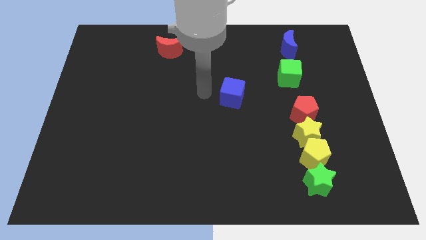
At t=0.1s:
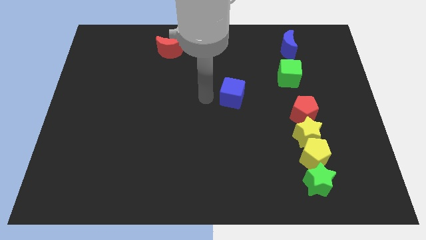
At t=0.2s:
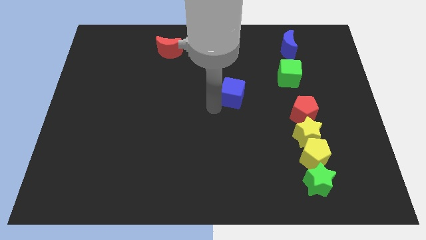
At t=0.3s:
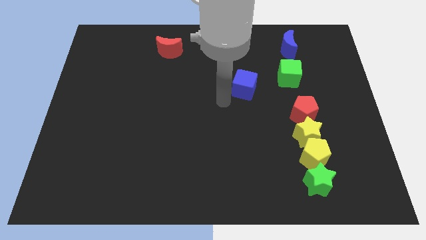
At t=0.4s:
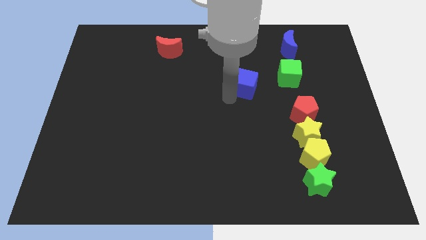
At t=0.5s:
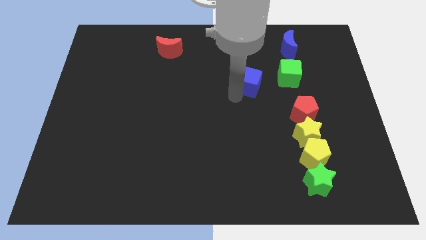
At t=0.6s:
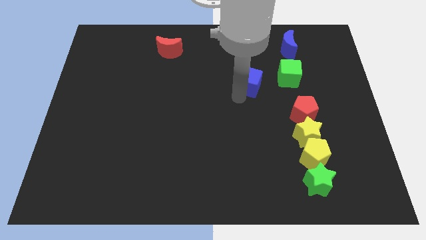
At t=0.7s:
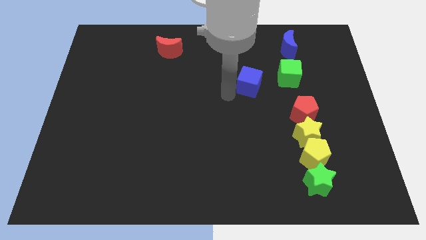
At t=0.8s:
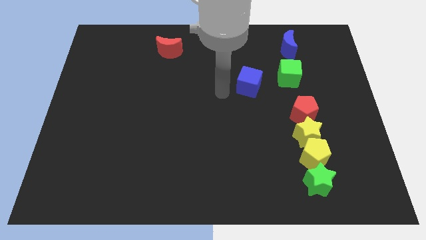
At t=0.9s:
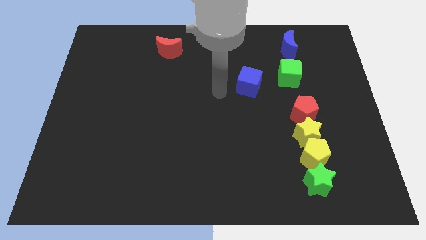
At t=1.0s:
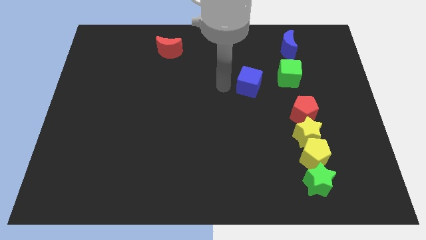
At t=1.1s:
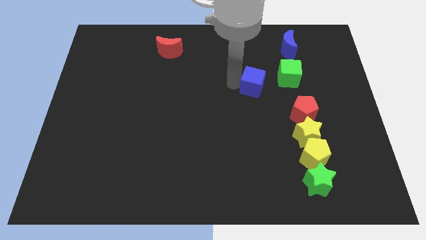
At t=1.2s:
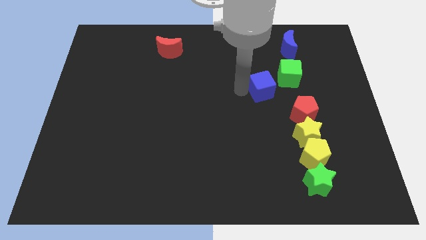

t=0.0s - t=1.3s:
push the blue cube towards the green cube

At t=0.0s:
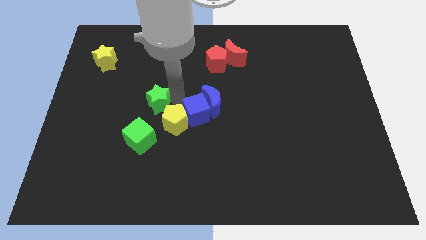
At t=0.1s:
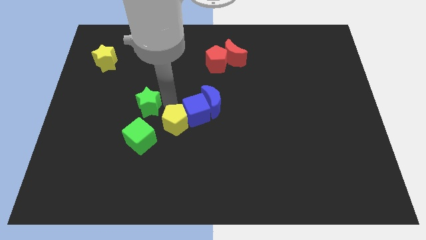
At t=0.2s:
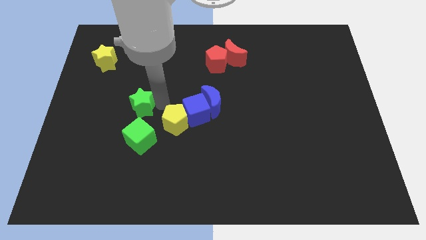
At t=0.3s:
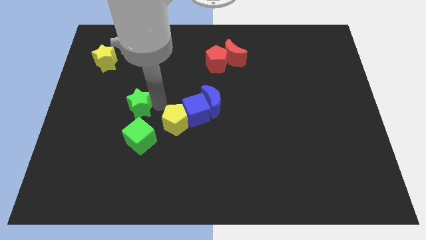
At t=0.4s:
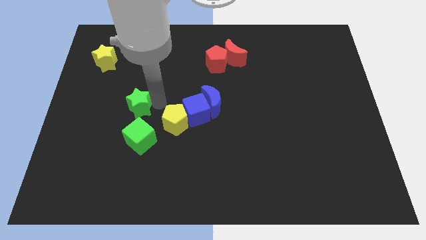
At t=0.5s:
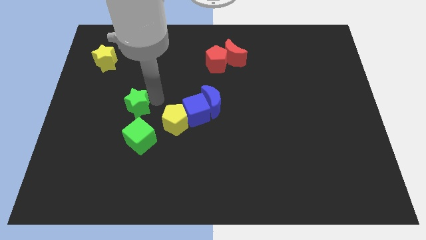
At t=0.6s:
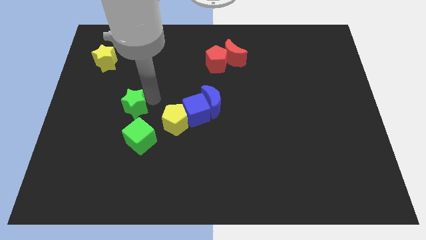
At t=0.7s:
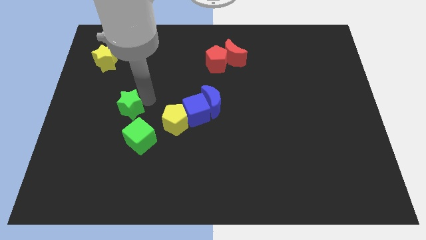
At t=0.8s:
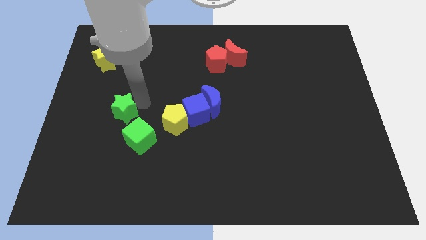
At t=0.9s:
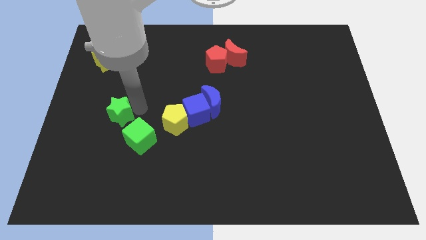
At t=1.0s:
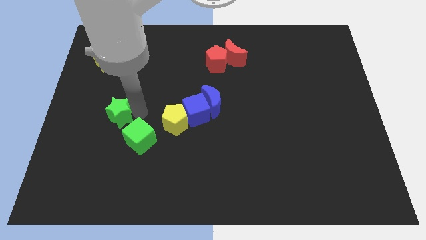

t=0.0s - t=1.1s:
move green star to the top of the green cube

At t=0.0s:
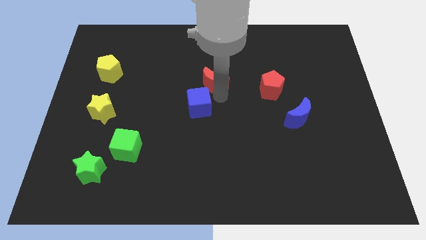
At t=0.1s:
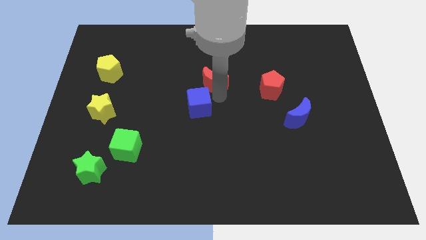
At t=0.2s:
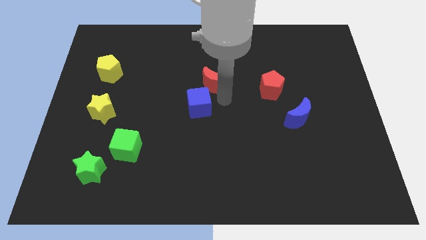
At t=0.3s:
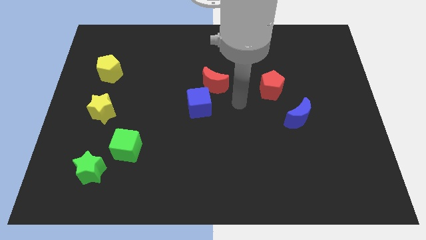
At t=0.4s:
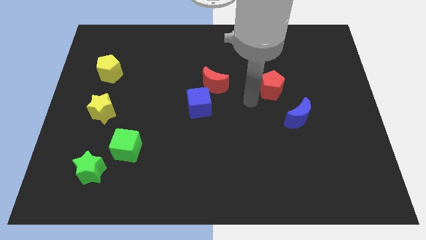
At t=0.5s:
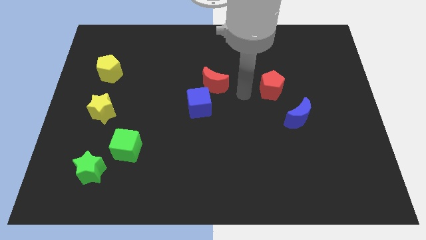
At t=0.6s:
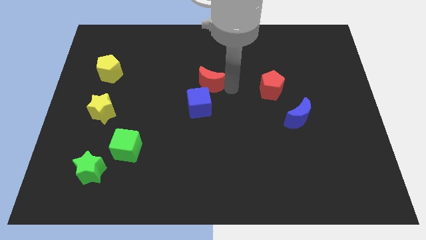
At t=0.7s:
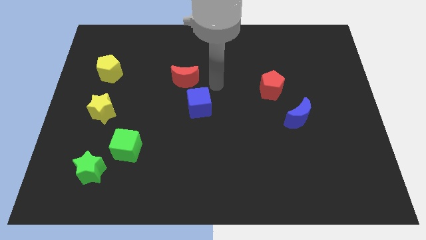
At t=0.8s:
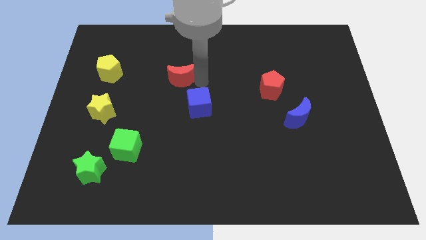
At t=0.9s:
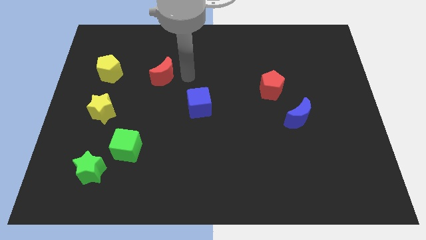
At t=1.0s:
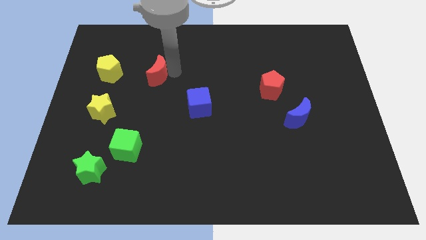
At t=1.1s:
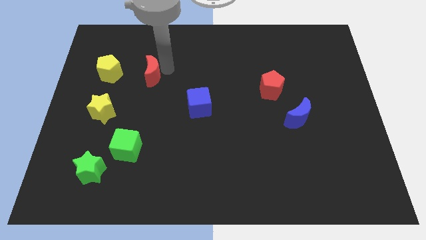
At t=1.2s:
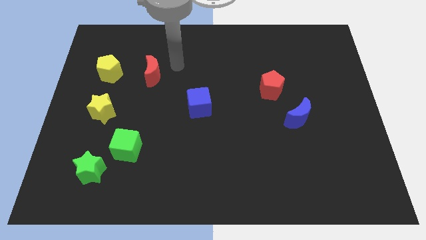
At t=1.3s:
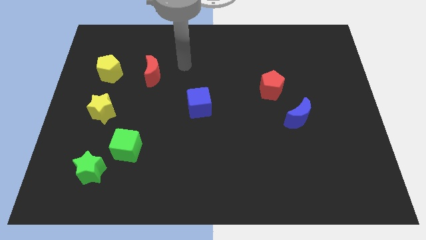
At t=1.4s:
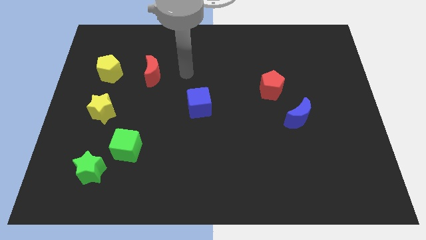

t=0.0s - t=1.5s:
move the red crescent to the right of the yellow pentagon

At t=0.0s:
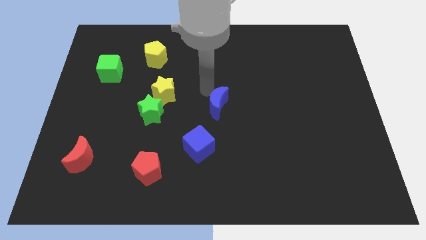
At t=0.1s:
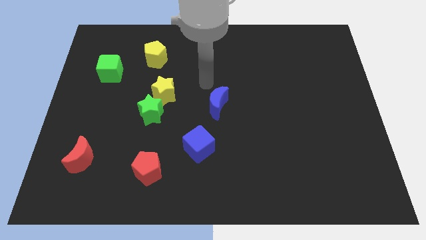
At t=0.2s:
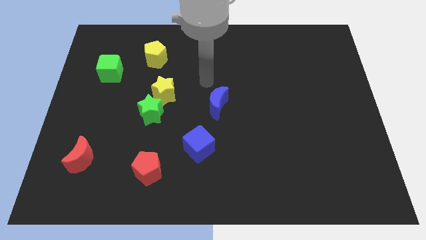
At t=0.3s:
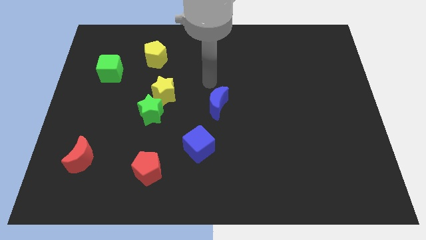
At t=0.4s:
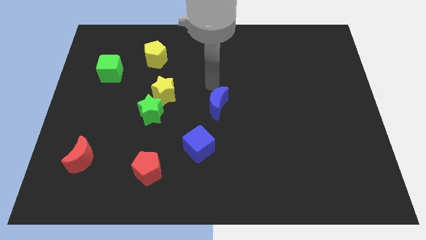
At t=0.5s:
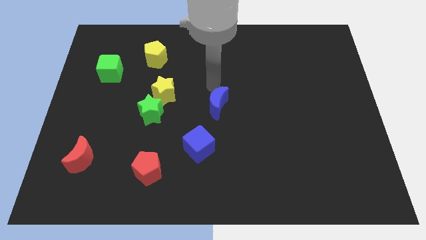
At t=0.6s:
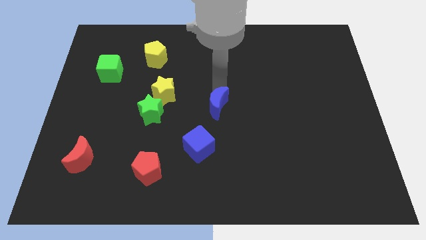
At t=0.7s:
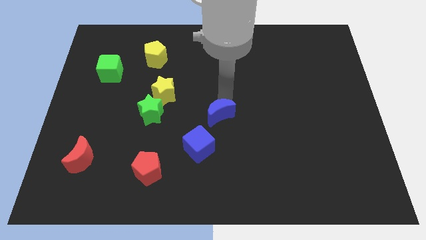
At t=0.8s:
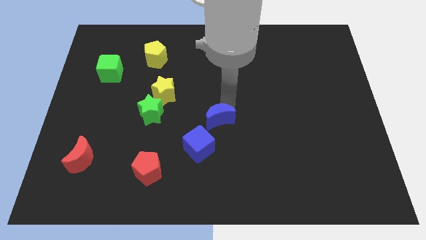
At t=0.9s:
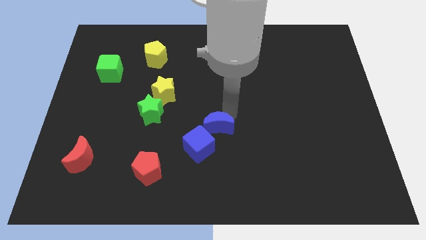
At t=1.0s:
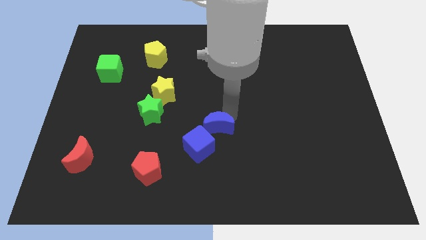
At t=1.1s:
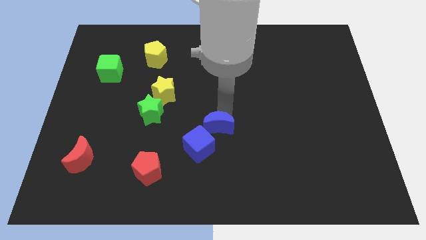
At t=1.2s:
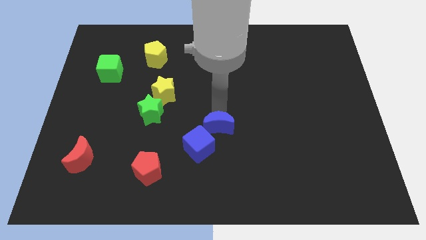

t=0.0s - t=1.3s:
push the blue crescent closer to the blue cube

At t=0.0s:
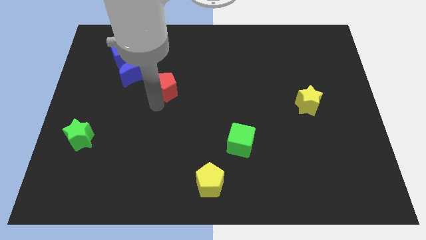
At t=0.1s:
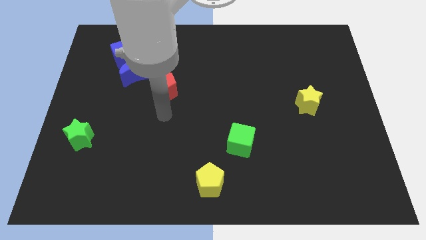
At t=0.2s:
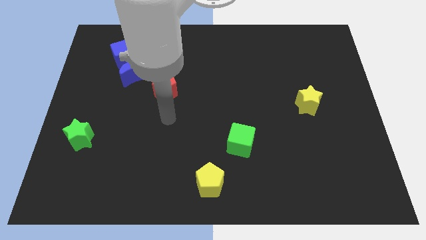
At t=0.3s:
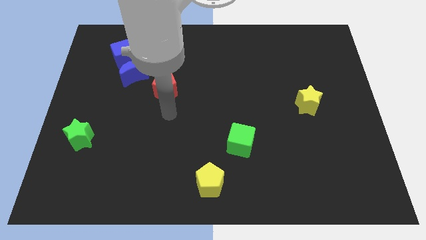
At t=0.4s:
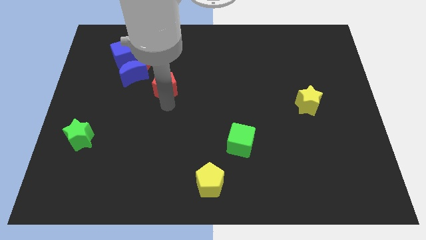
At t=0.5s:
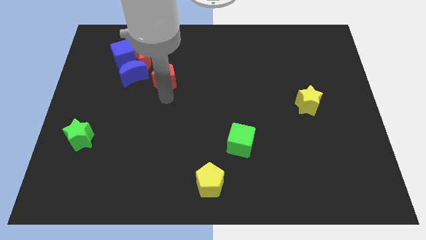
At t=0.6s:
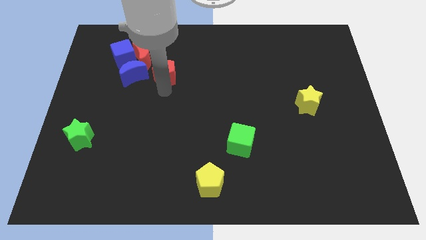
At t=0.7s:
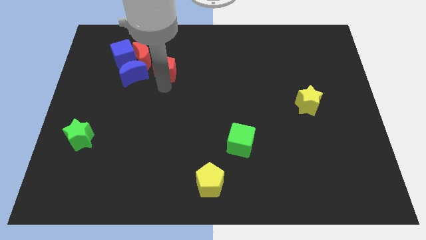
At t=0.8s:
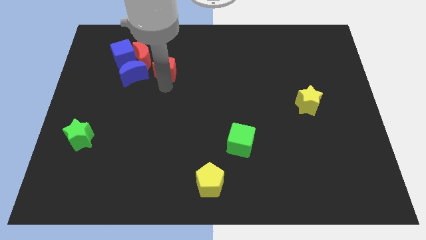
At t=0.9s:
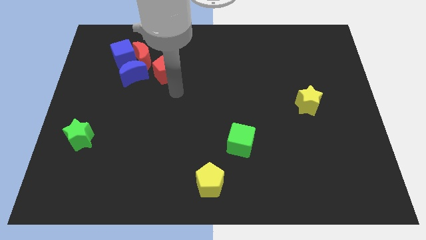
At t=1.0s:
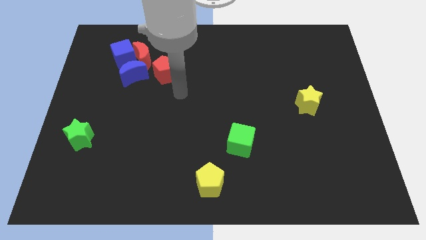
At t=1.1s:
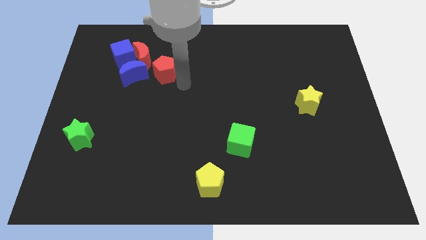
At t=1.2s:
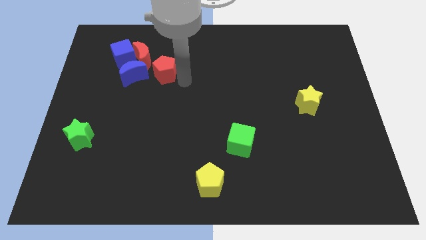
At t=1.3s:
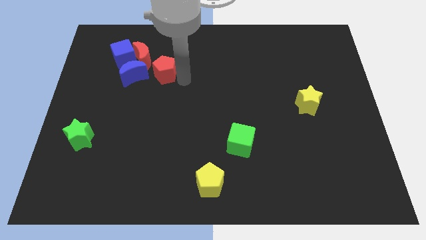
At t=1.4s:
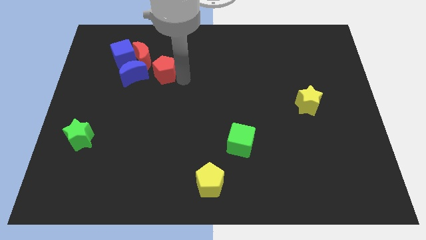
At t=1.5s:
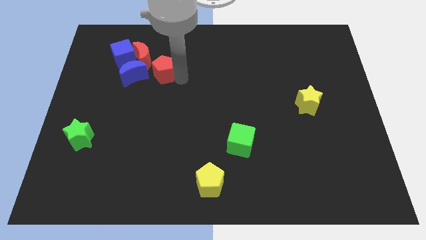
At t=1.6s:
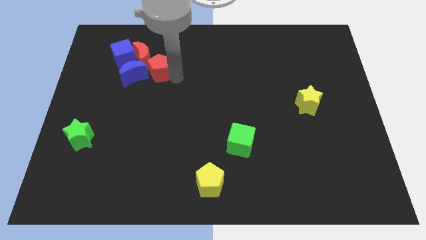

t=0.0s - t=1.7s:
move the red pentagon close to the blue semicircle

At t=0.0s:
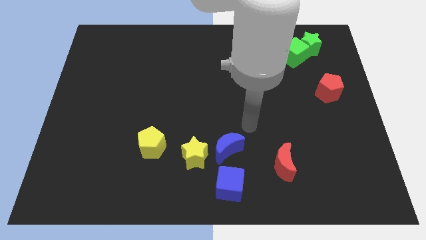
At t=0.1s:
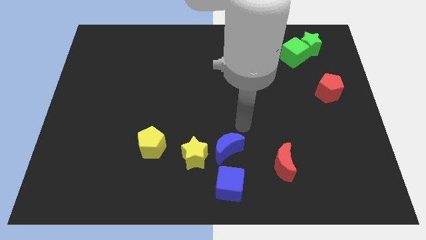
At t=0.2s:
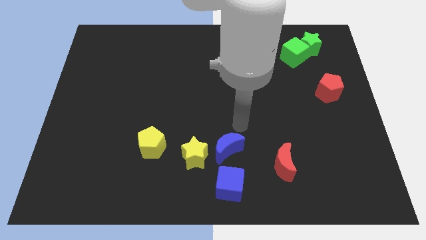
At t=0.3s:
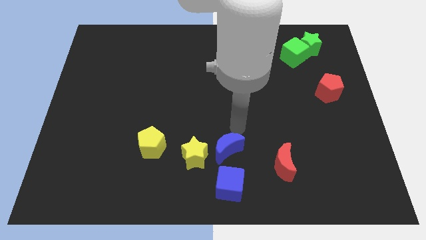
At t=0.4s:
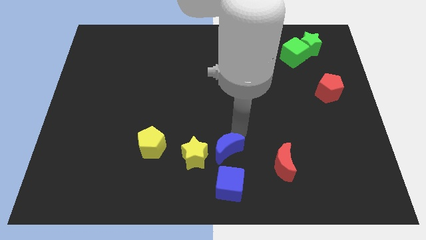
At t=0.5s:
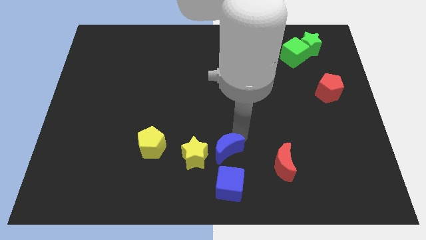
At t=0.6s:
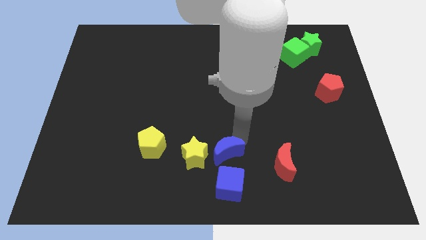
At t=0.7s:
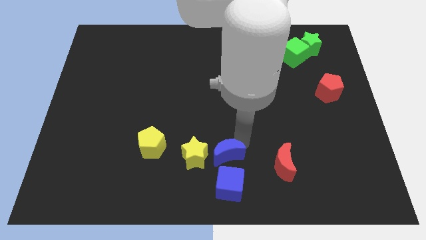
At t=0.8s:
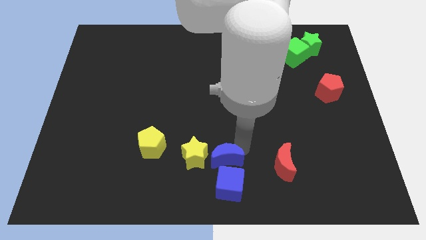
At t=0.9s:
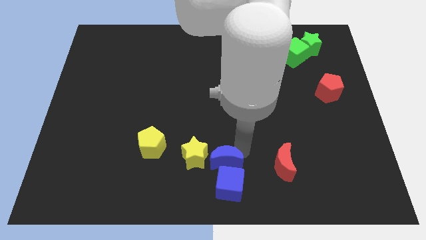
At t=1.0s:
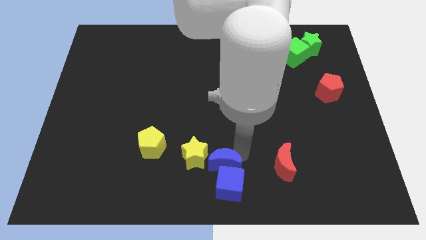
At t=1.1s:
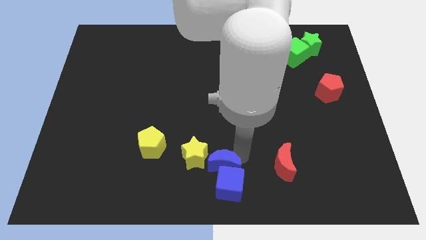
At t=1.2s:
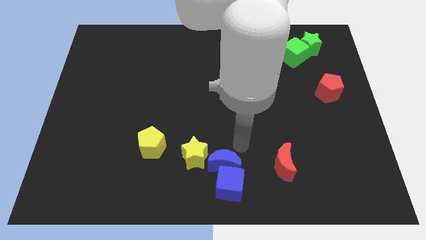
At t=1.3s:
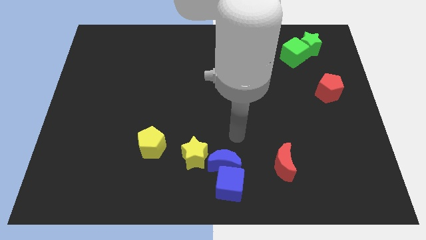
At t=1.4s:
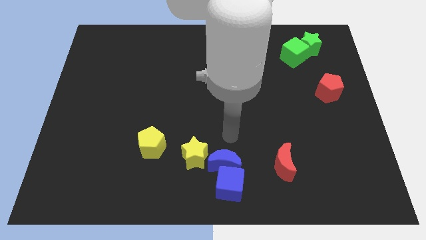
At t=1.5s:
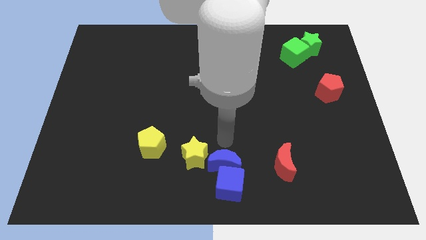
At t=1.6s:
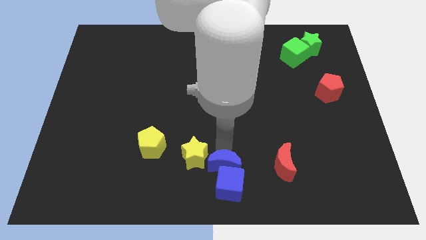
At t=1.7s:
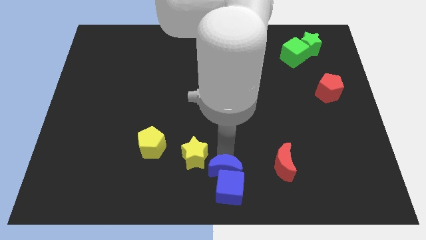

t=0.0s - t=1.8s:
move the blue moon into the blue cube

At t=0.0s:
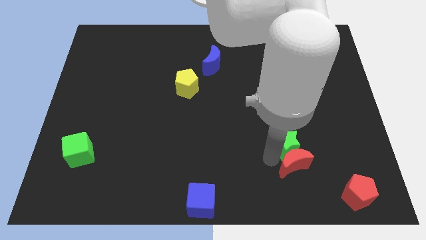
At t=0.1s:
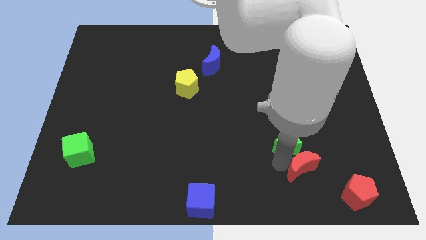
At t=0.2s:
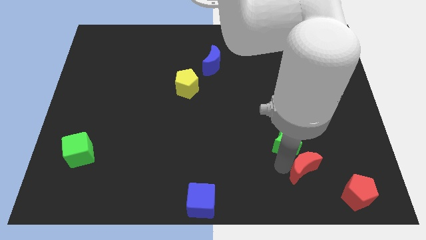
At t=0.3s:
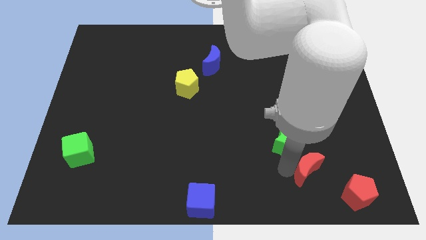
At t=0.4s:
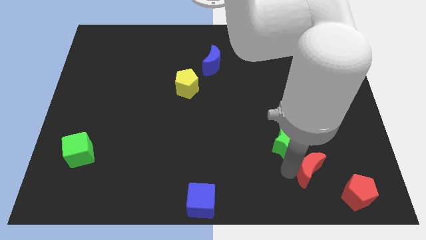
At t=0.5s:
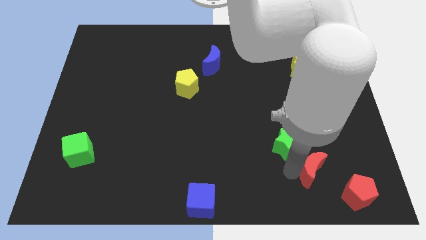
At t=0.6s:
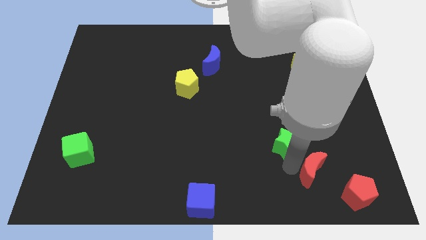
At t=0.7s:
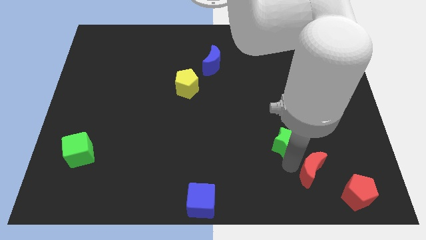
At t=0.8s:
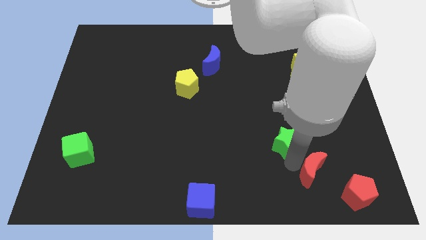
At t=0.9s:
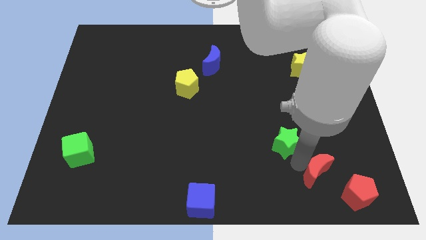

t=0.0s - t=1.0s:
place the red crescent in between the red pentagon and green star
